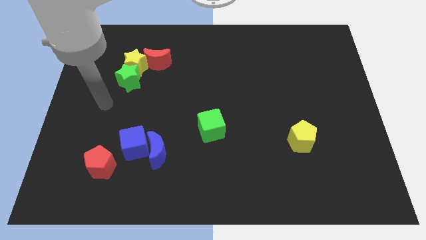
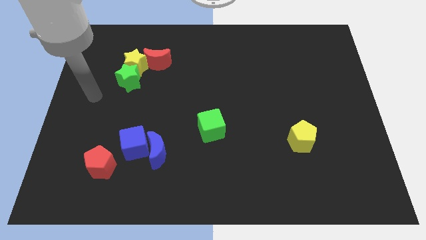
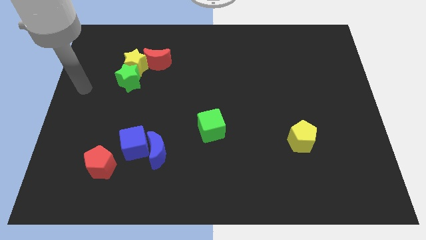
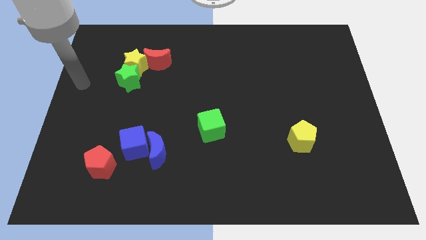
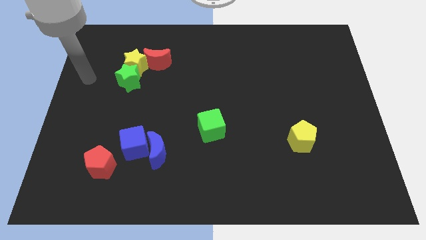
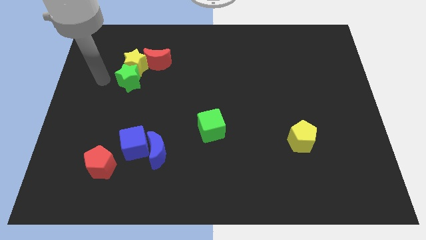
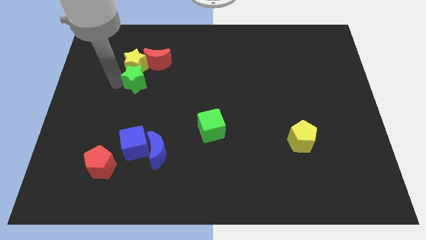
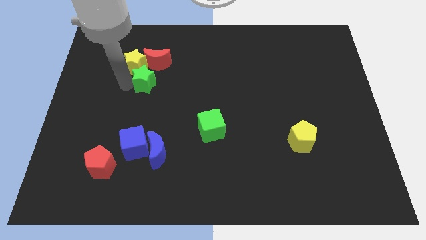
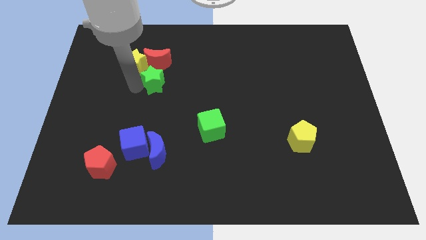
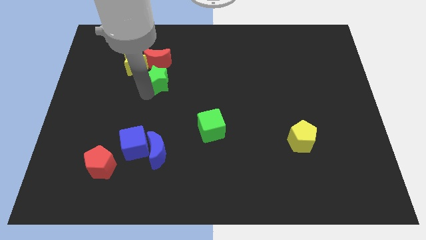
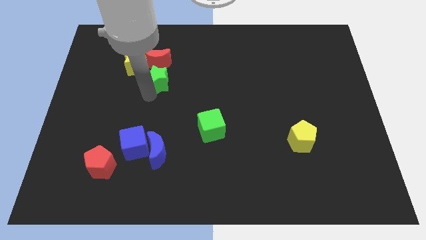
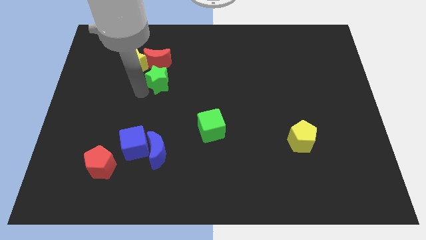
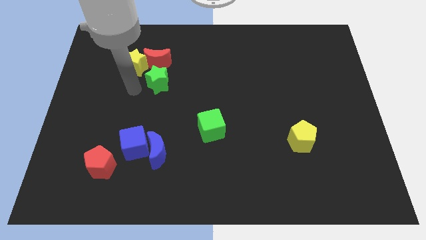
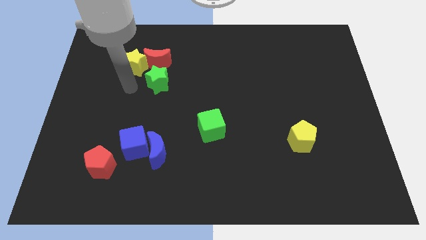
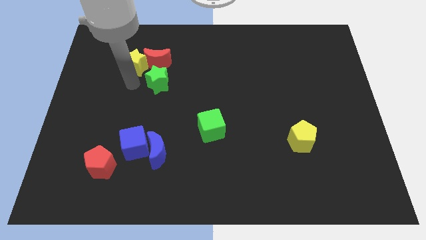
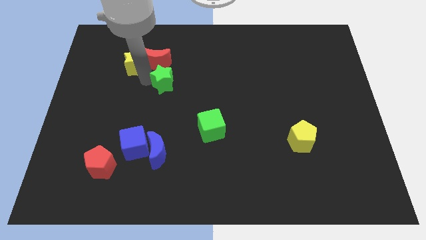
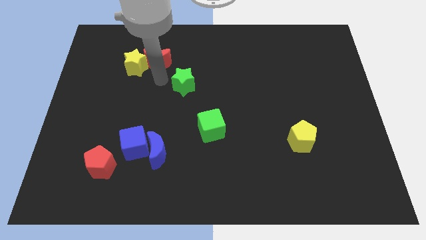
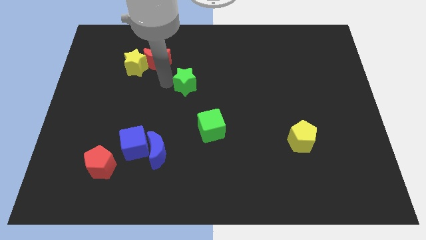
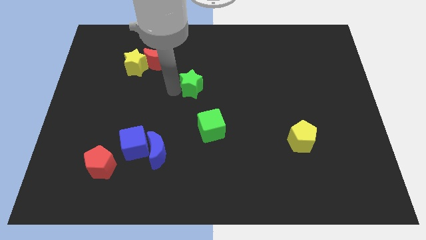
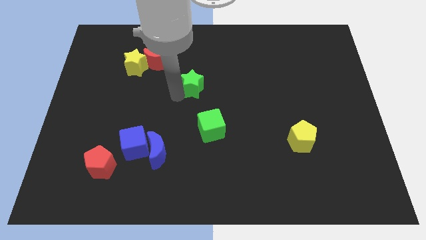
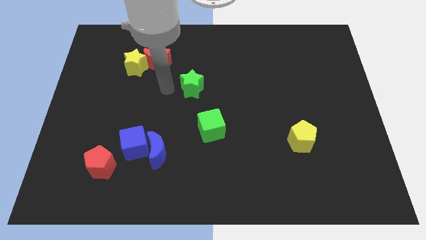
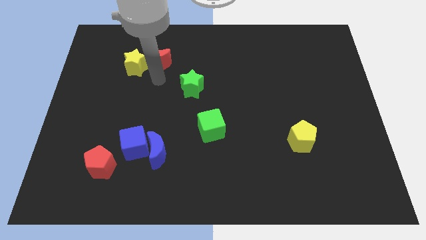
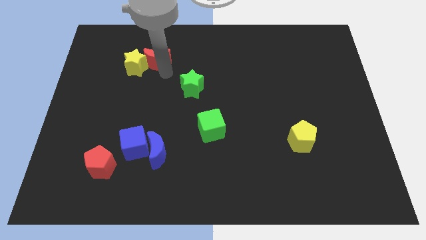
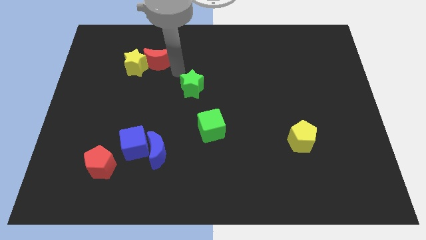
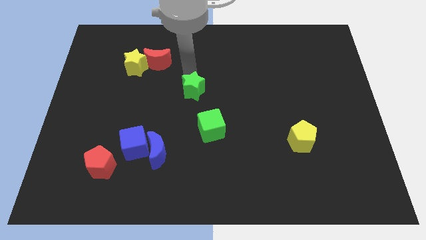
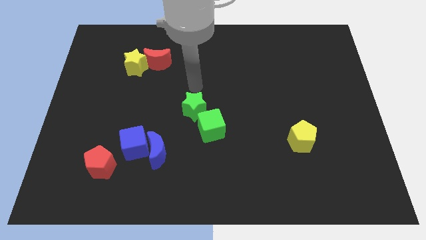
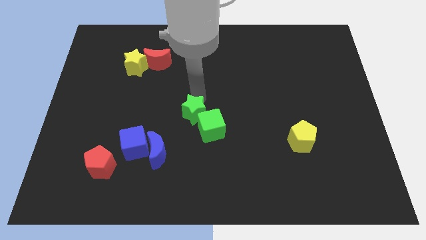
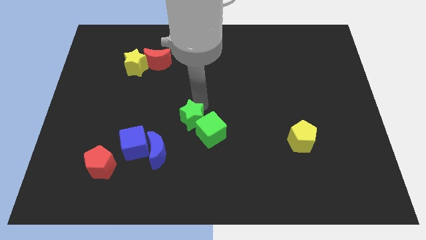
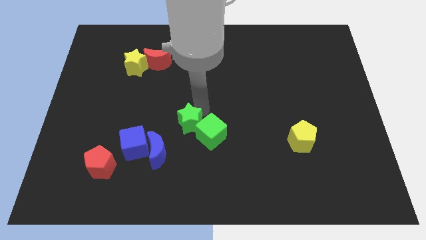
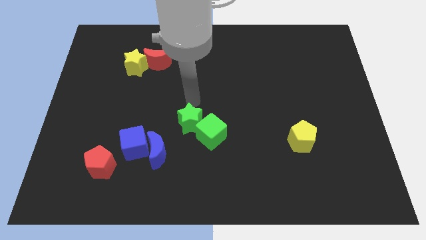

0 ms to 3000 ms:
push green star into green cube

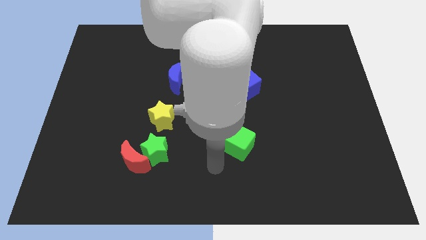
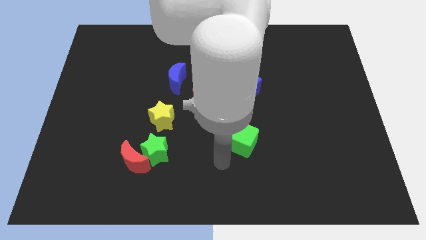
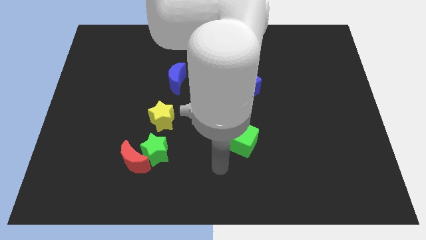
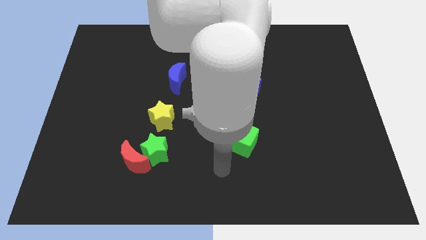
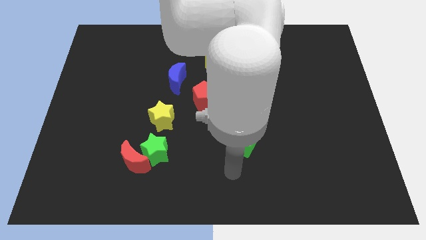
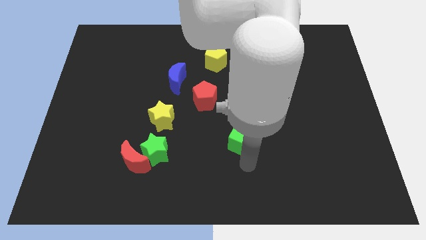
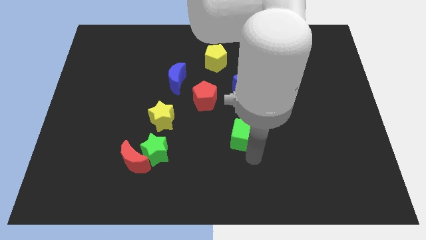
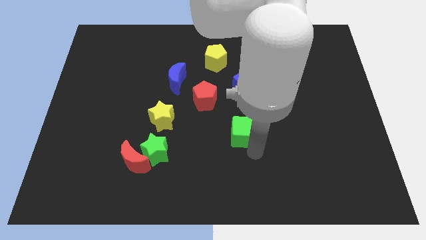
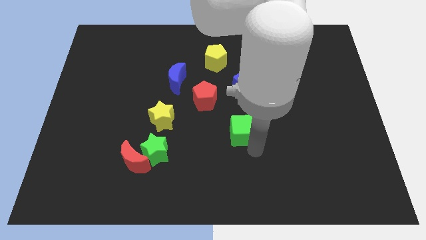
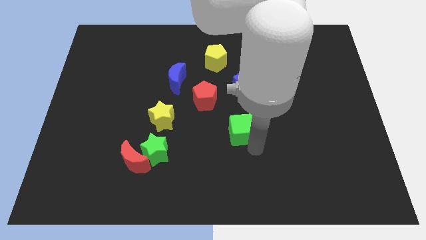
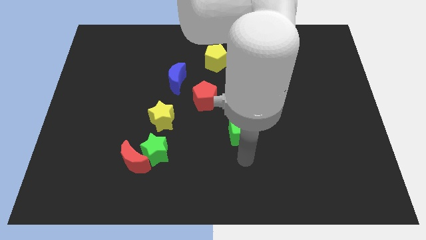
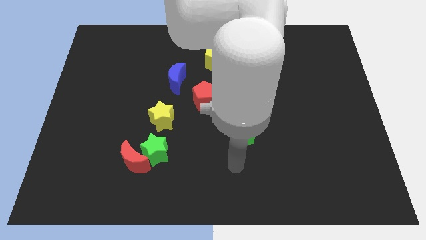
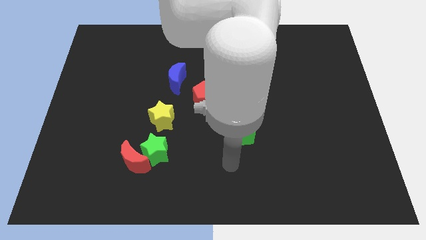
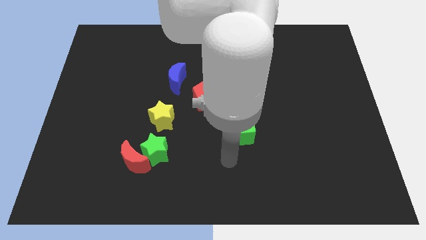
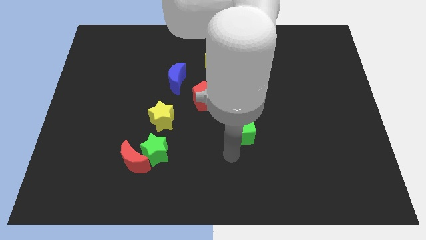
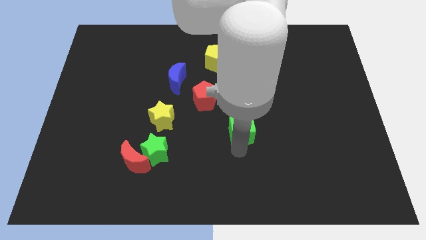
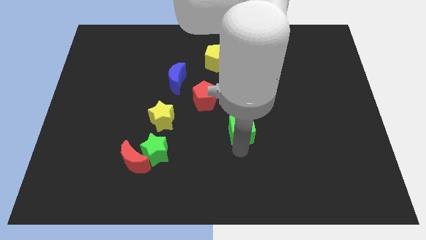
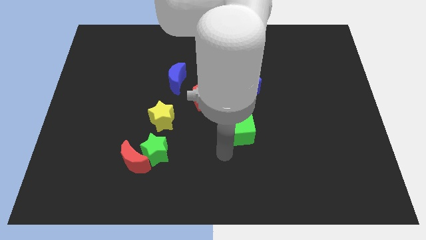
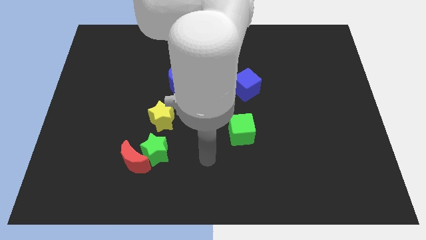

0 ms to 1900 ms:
slide the green cube to the bottom side of the blue cube

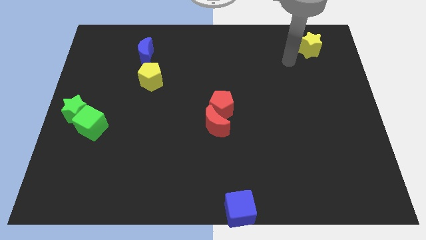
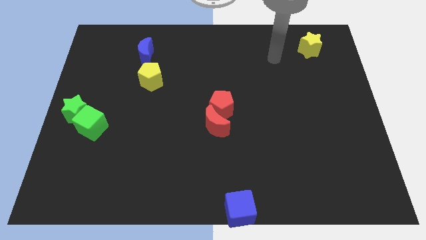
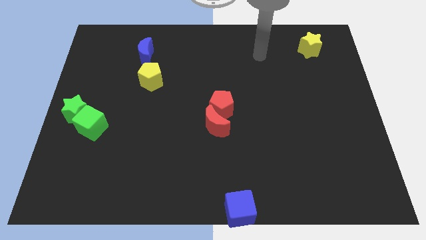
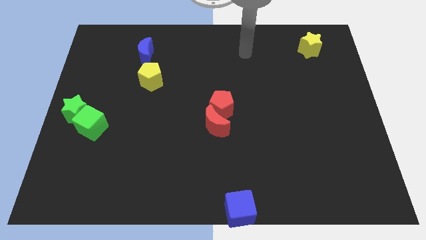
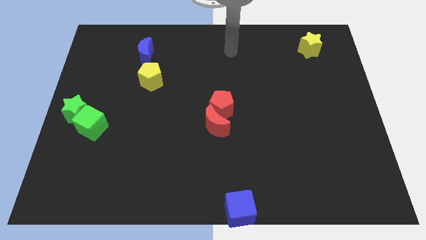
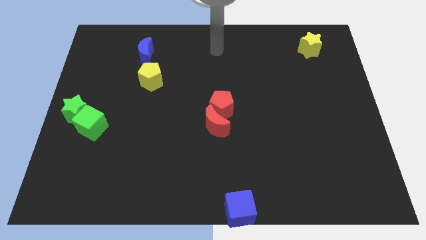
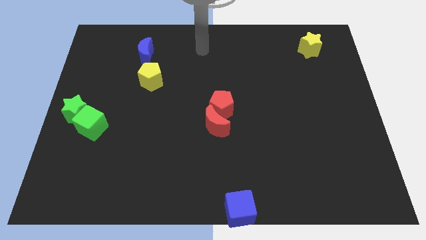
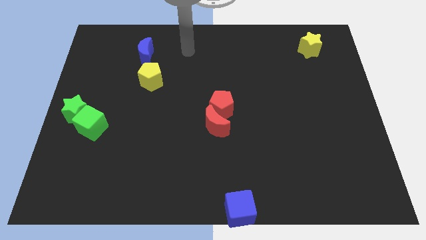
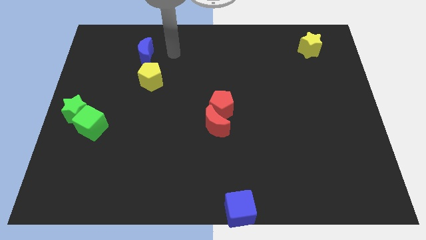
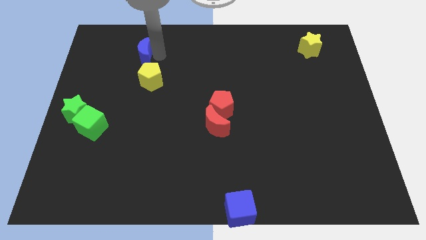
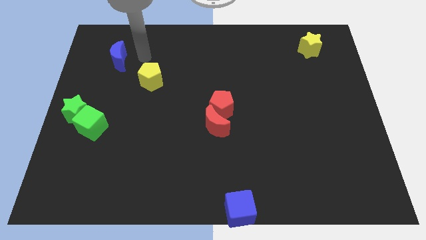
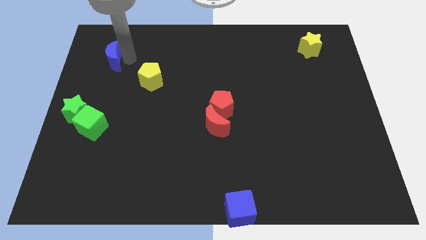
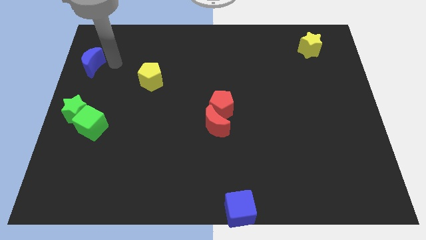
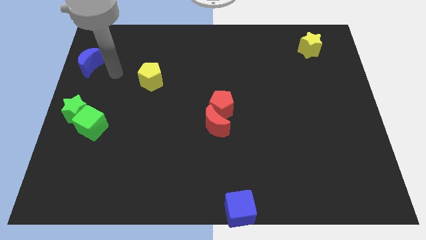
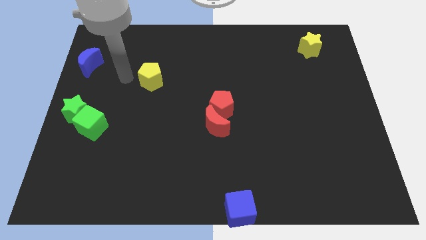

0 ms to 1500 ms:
drag the blue moon to the left side

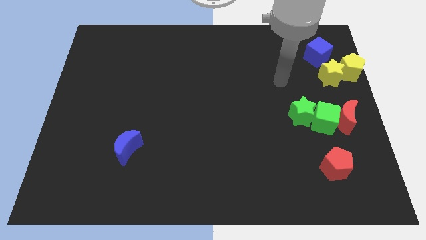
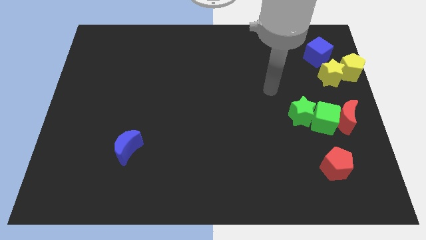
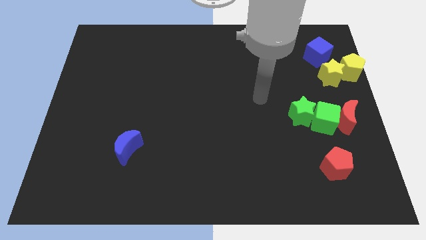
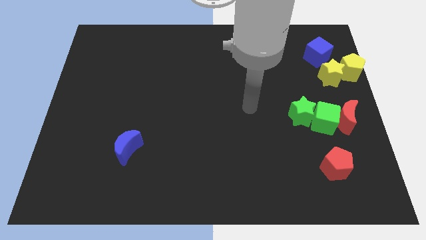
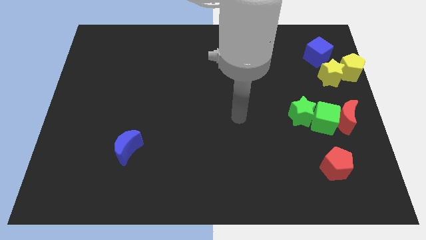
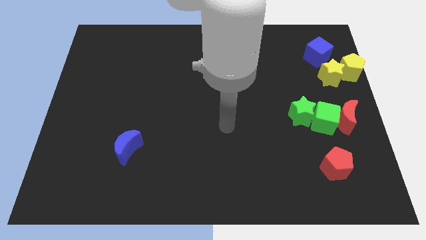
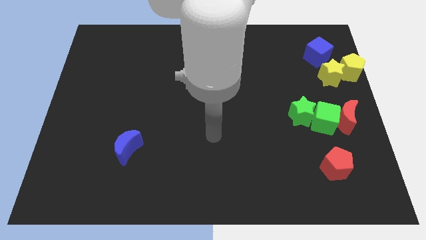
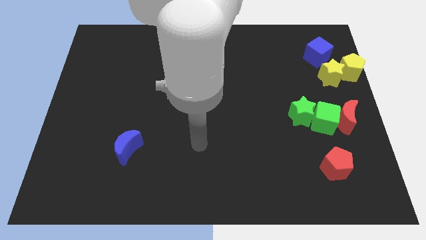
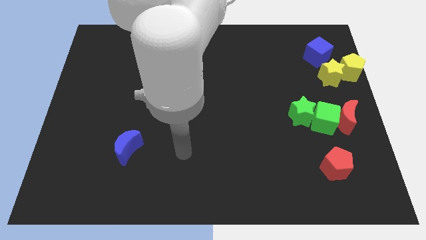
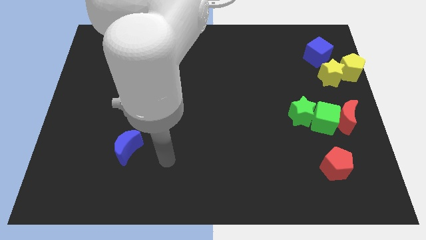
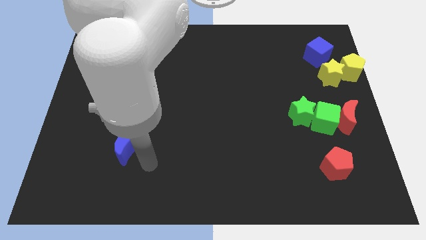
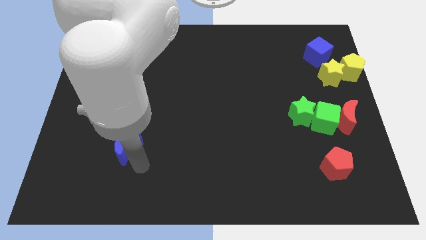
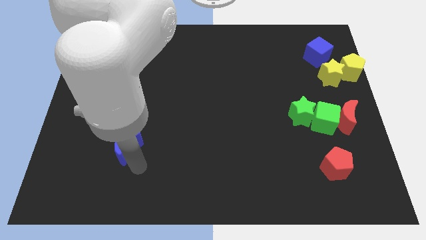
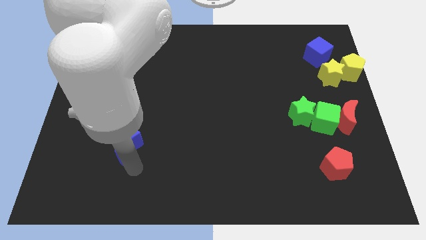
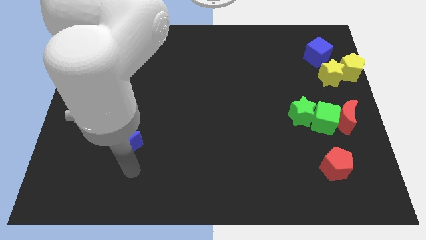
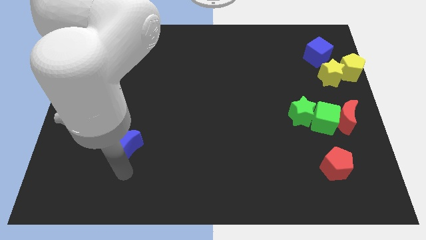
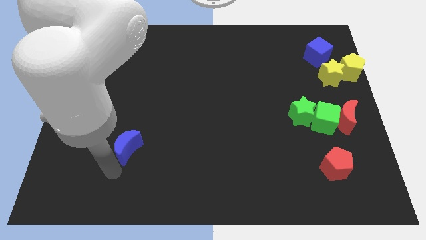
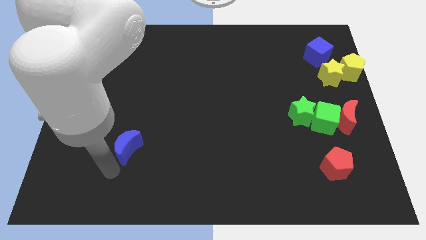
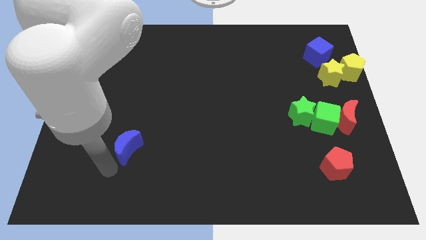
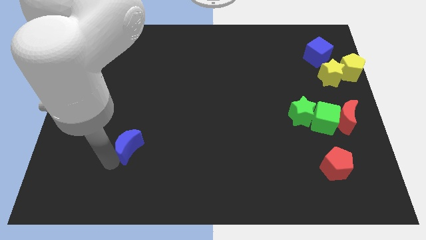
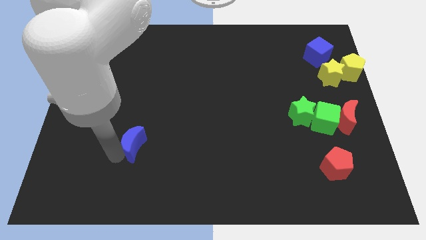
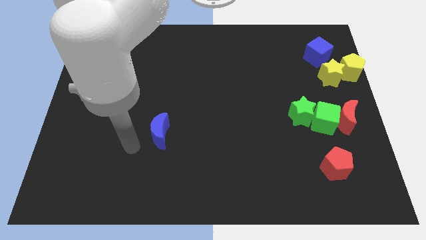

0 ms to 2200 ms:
slightly move the blue crescent towards top

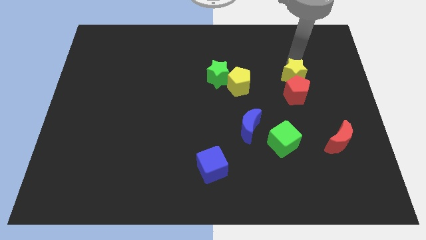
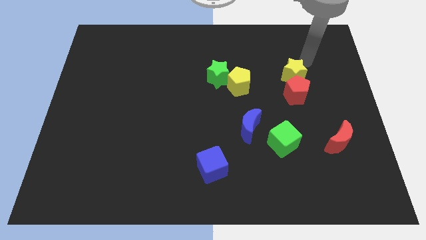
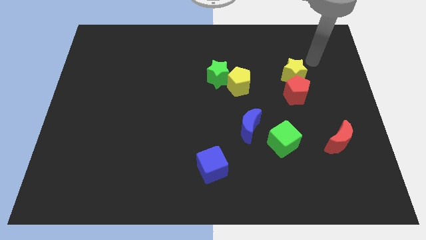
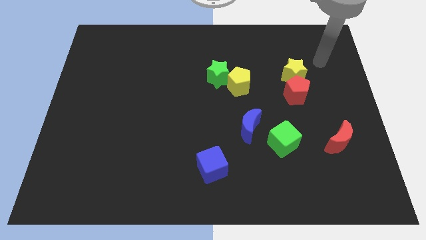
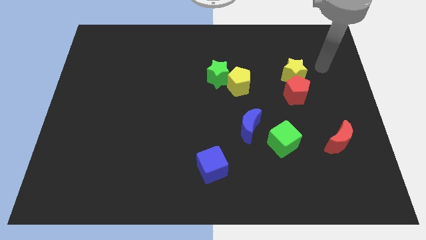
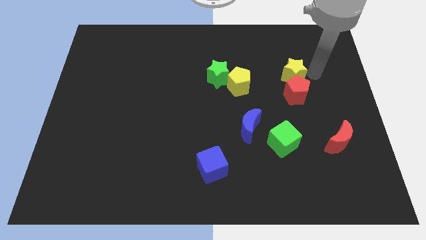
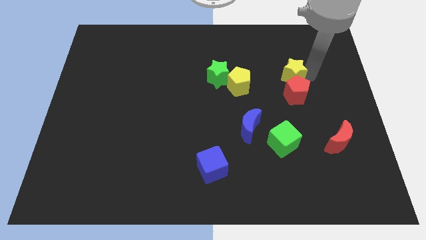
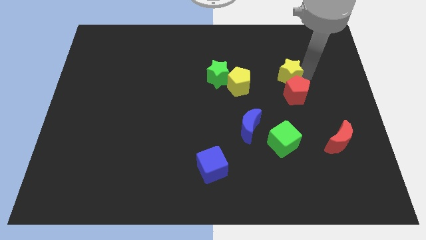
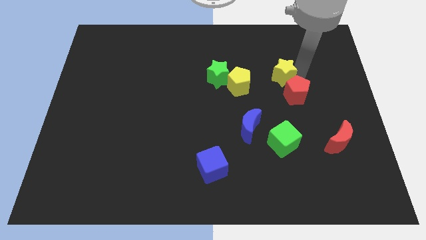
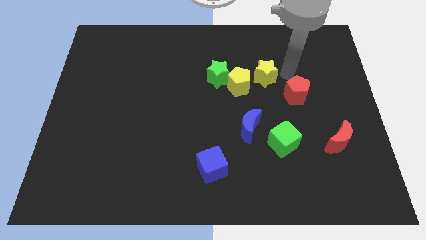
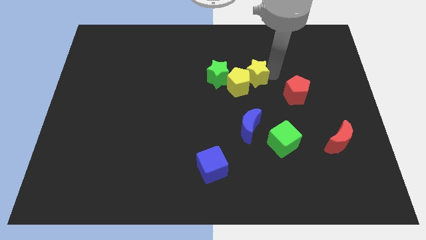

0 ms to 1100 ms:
push the yellow star into the yellow pentagon
